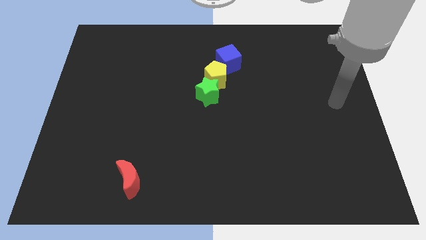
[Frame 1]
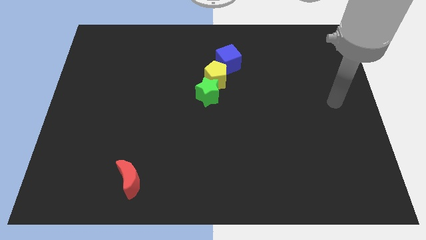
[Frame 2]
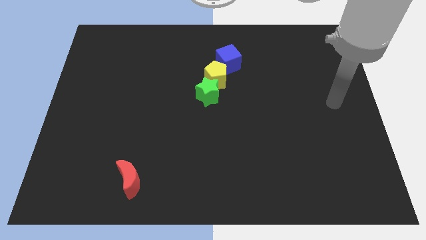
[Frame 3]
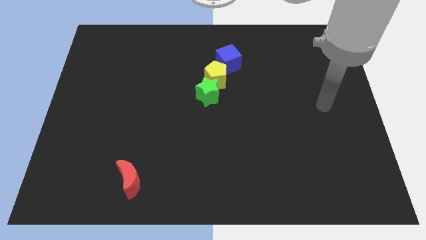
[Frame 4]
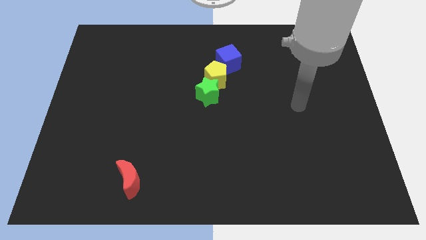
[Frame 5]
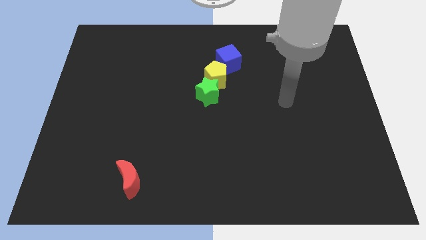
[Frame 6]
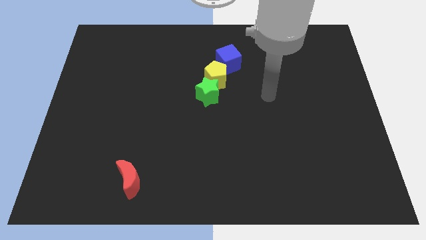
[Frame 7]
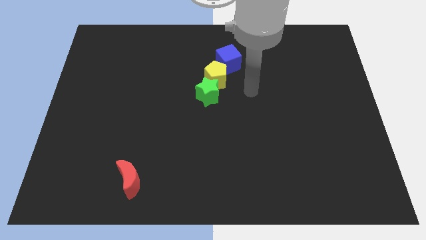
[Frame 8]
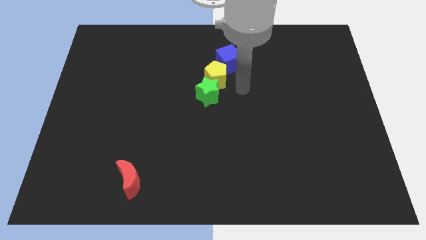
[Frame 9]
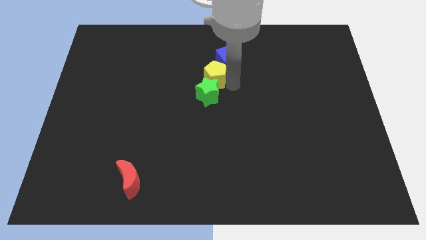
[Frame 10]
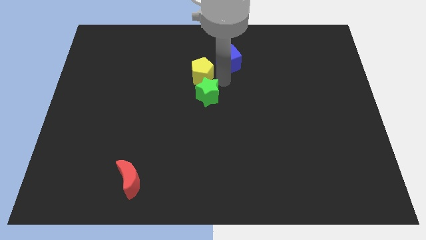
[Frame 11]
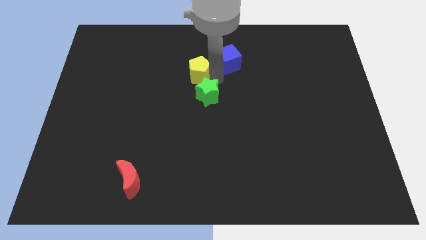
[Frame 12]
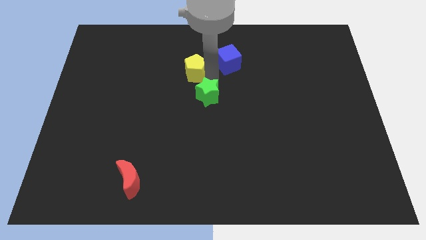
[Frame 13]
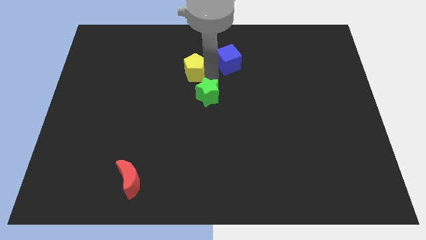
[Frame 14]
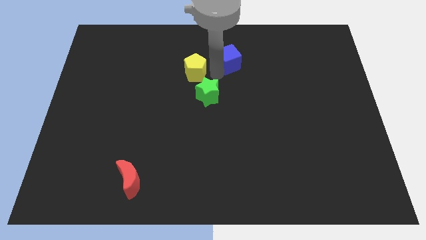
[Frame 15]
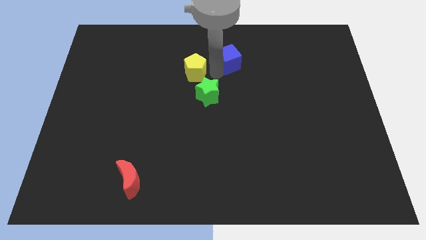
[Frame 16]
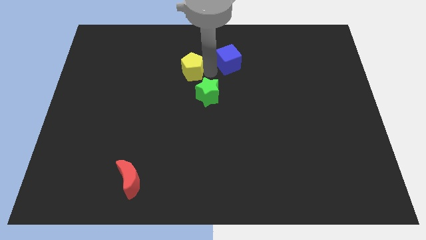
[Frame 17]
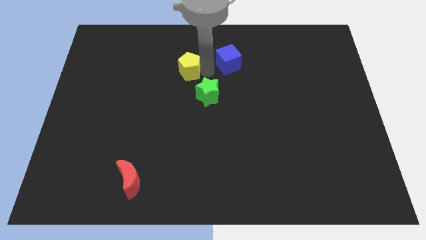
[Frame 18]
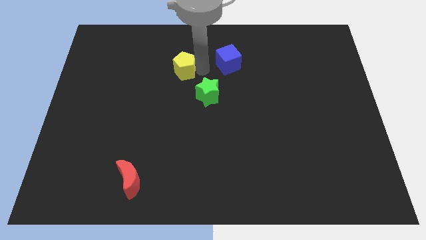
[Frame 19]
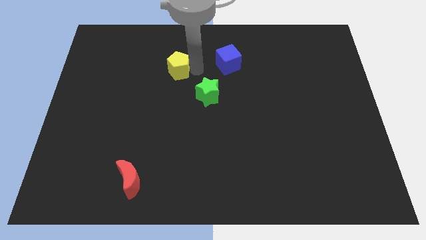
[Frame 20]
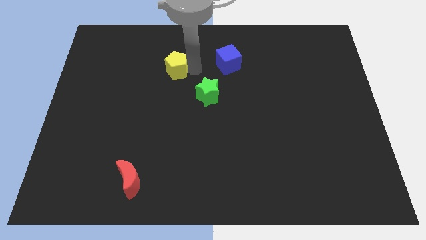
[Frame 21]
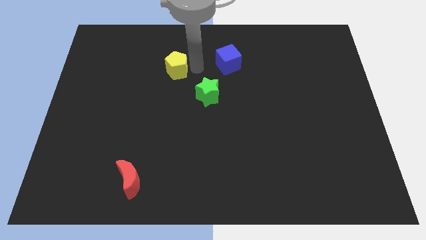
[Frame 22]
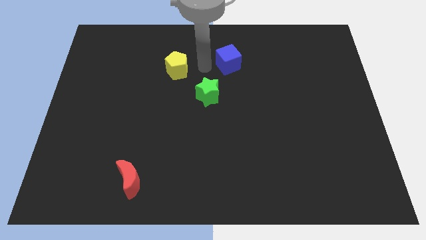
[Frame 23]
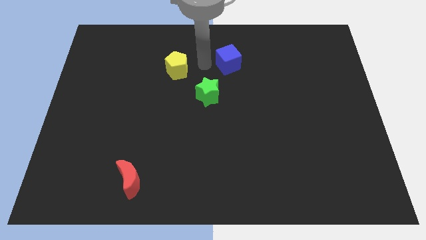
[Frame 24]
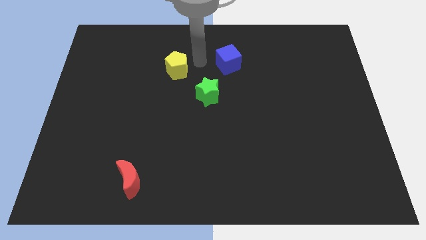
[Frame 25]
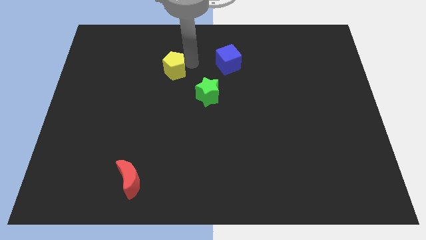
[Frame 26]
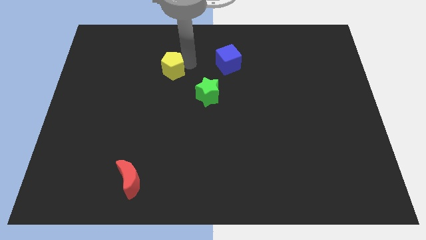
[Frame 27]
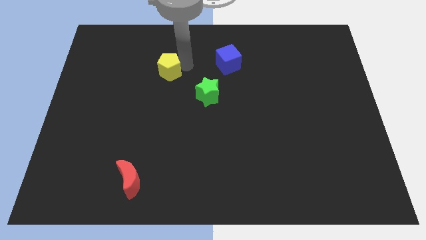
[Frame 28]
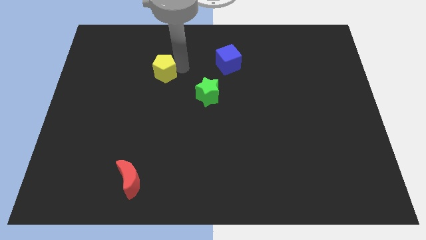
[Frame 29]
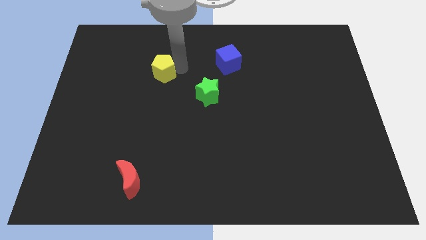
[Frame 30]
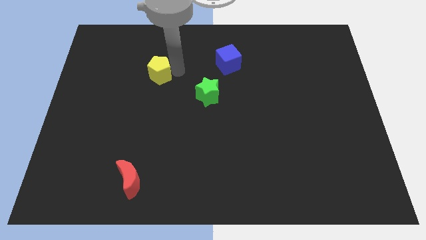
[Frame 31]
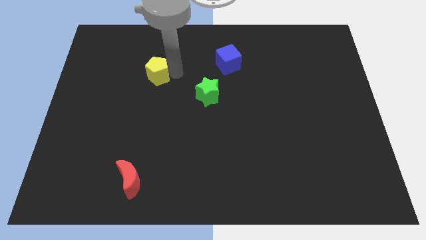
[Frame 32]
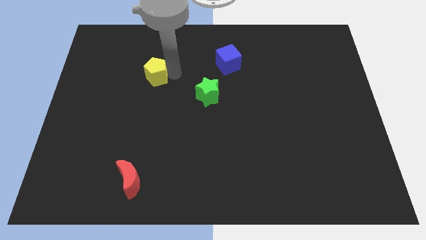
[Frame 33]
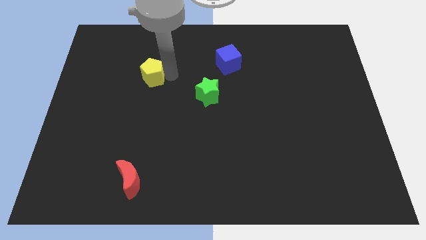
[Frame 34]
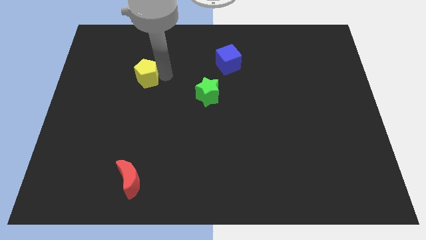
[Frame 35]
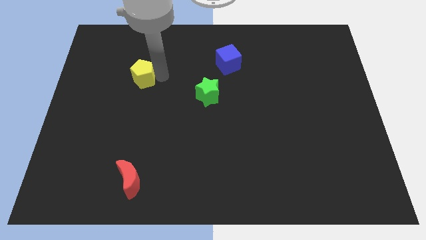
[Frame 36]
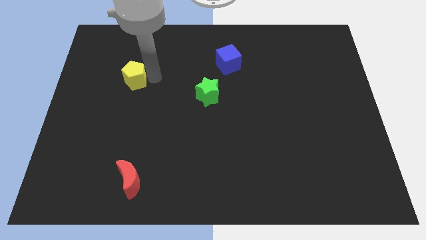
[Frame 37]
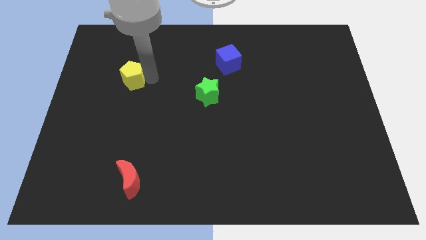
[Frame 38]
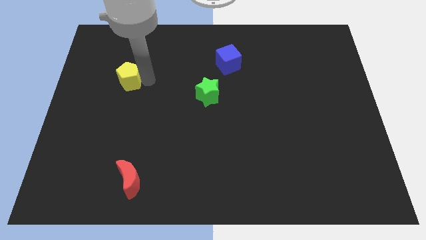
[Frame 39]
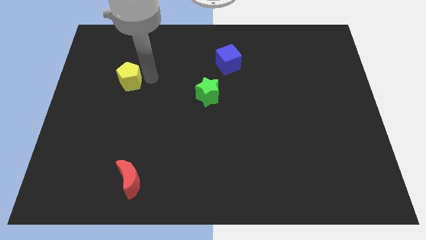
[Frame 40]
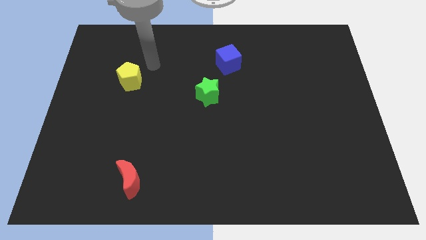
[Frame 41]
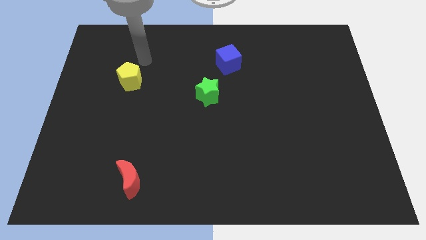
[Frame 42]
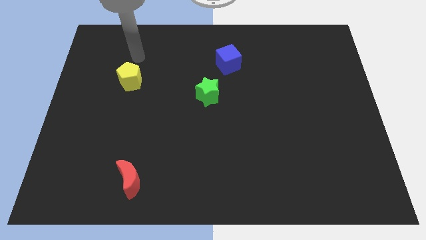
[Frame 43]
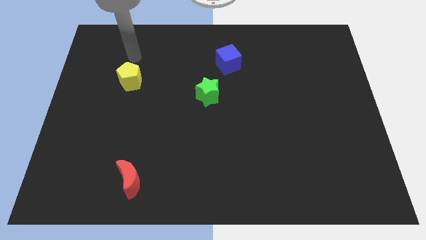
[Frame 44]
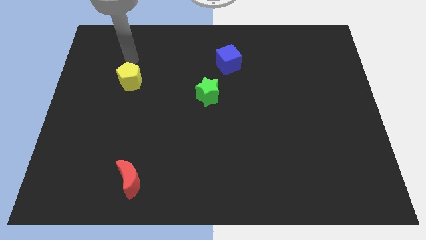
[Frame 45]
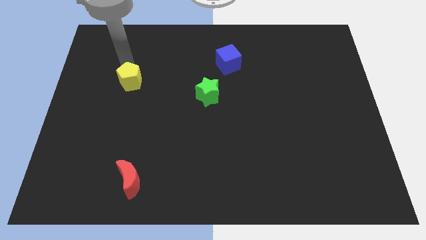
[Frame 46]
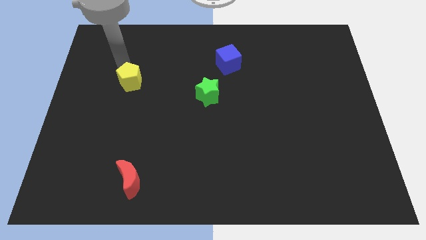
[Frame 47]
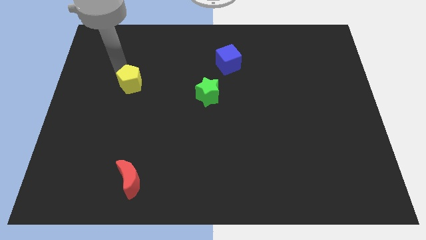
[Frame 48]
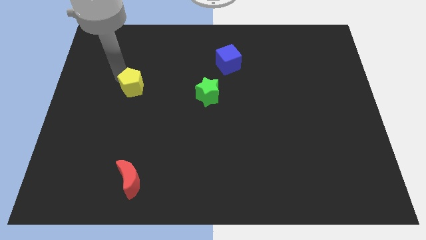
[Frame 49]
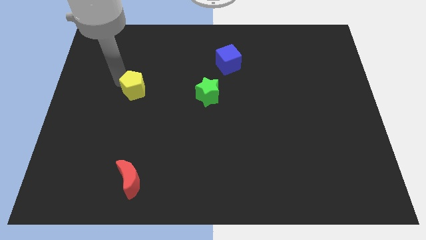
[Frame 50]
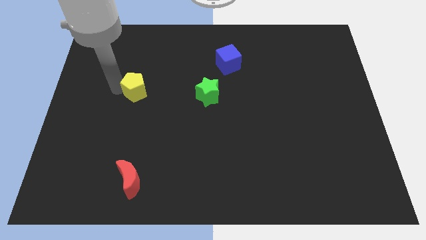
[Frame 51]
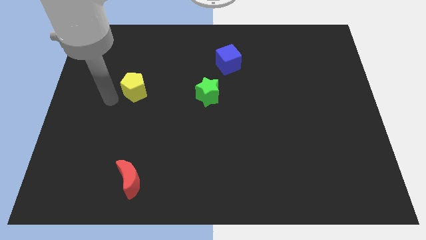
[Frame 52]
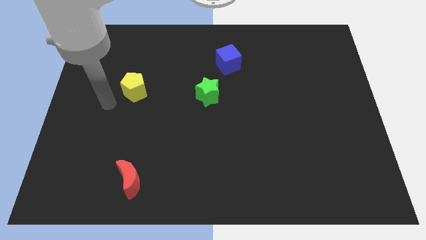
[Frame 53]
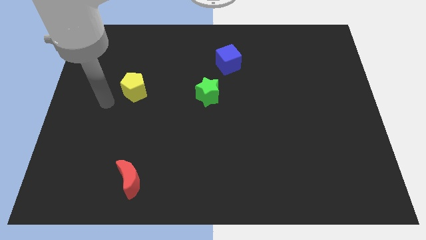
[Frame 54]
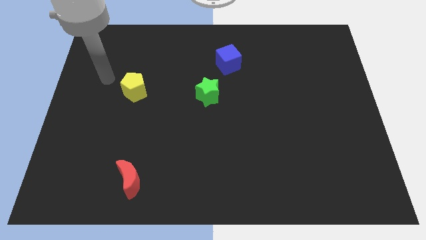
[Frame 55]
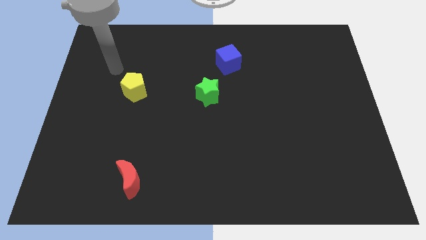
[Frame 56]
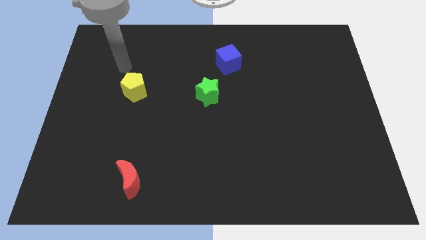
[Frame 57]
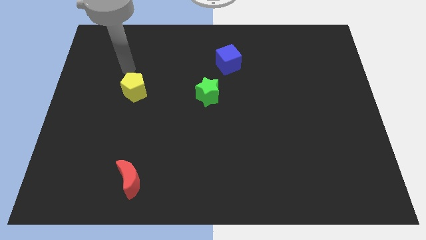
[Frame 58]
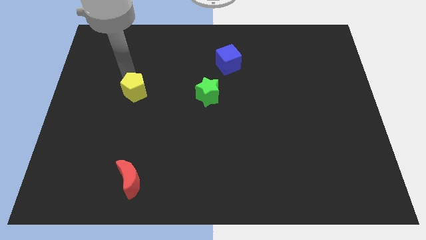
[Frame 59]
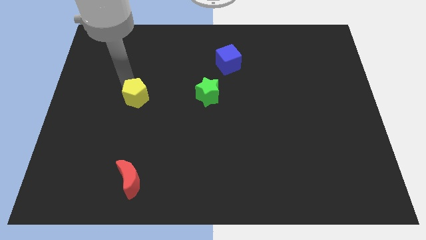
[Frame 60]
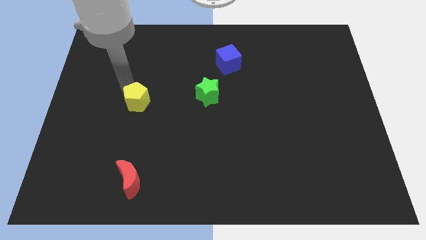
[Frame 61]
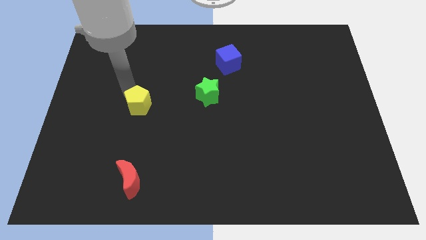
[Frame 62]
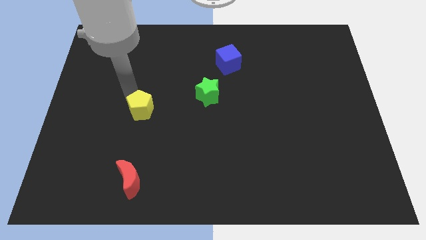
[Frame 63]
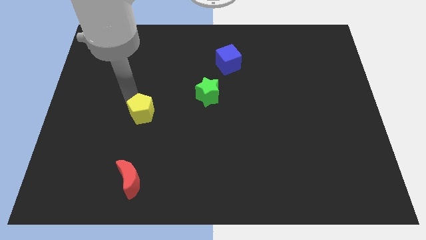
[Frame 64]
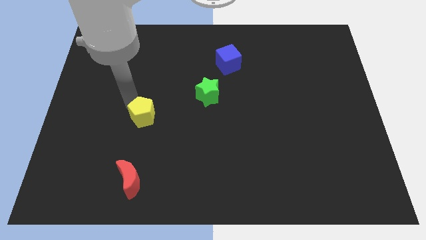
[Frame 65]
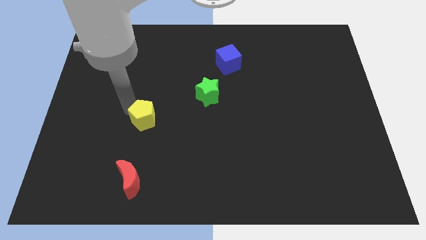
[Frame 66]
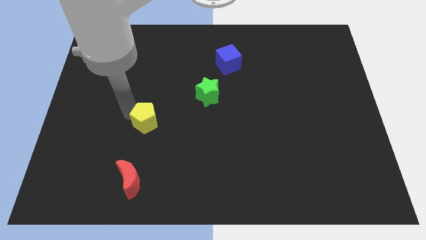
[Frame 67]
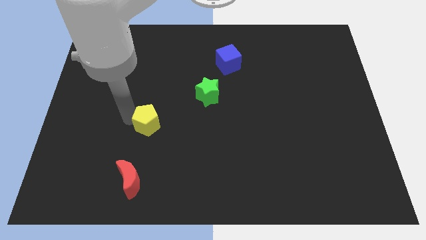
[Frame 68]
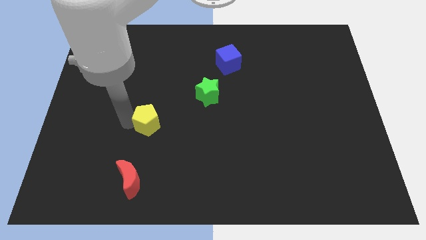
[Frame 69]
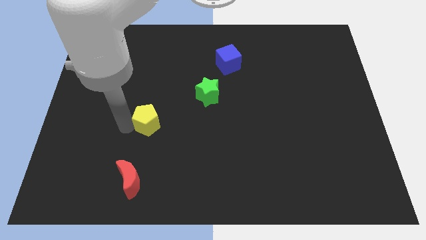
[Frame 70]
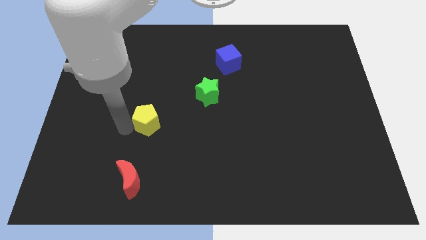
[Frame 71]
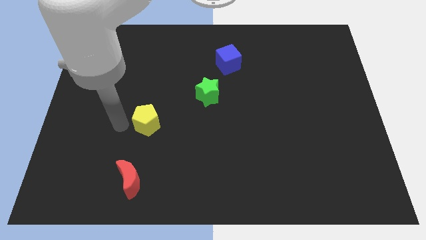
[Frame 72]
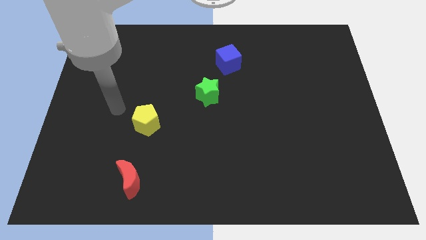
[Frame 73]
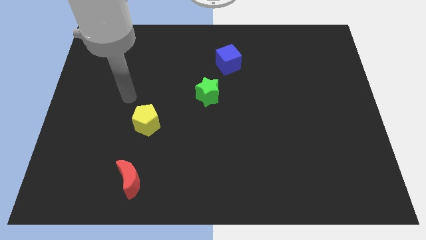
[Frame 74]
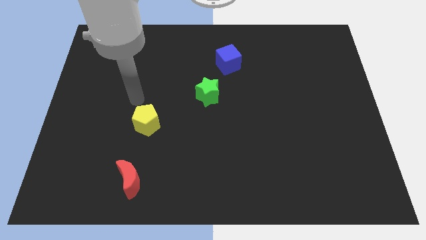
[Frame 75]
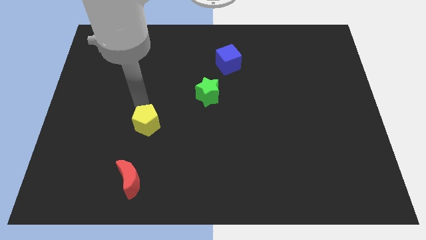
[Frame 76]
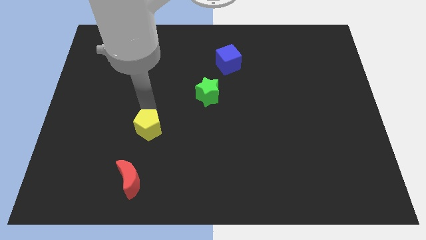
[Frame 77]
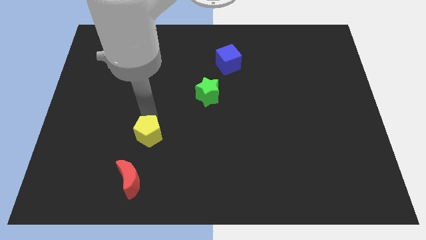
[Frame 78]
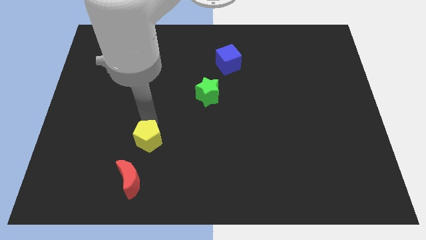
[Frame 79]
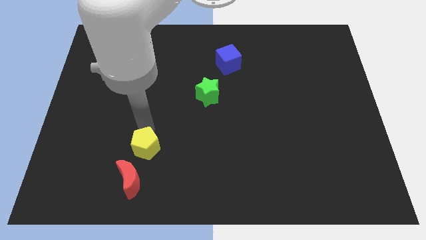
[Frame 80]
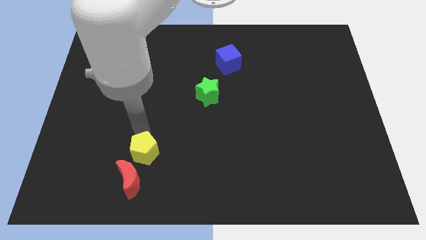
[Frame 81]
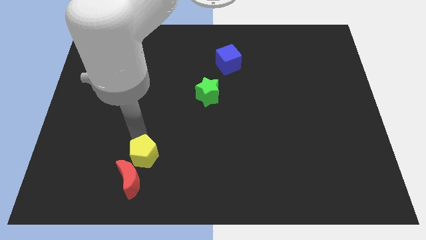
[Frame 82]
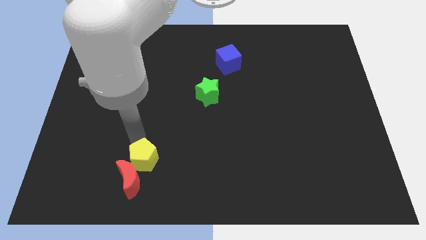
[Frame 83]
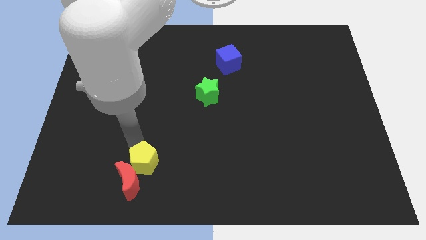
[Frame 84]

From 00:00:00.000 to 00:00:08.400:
put the pentagon towards the red block
